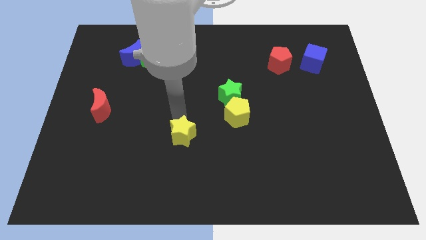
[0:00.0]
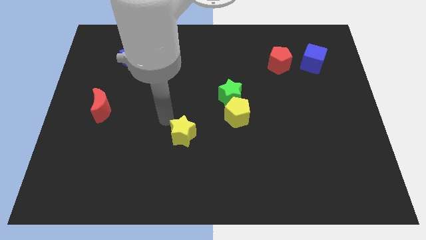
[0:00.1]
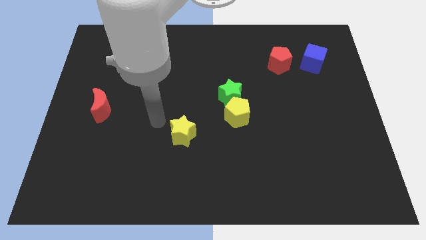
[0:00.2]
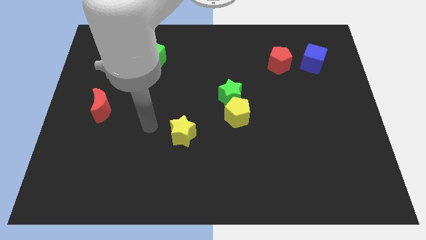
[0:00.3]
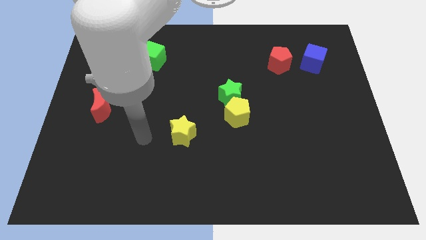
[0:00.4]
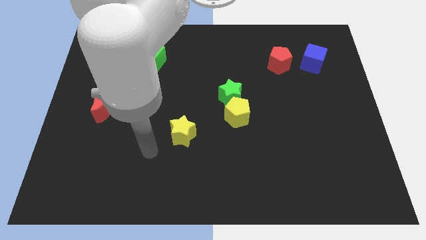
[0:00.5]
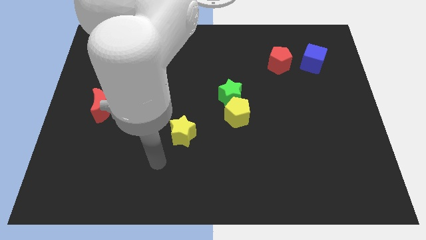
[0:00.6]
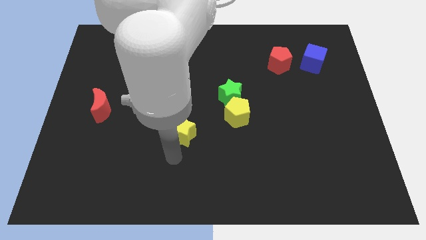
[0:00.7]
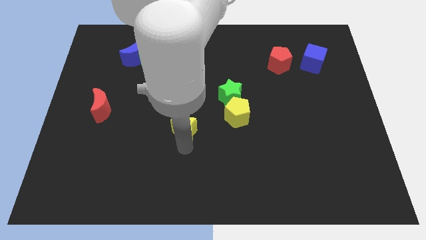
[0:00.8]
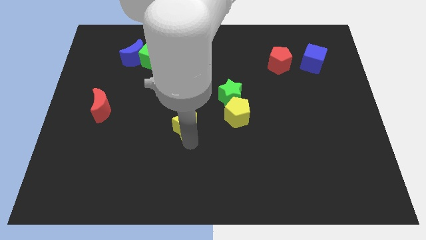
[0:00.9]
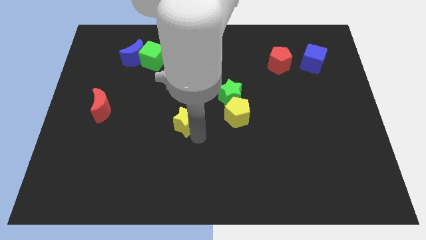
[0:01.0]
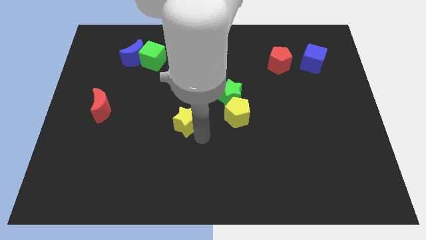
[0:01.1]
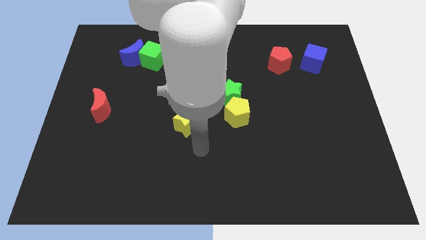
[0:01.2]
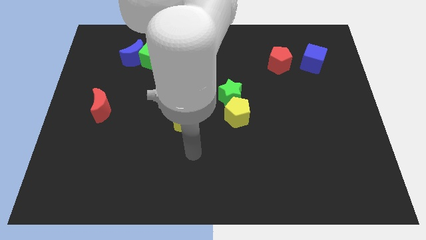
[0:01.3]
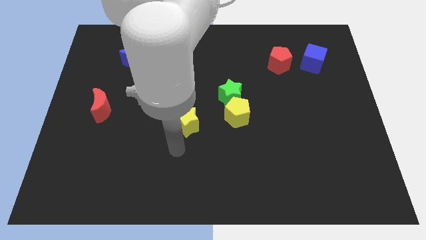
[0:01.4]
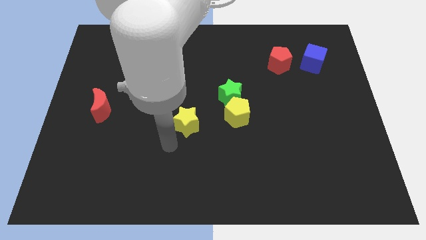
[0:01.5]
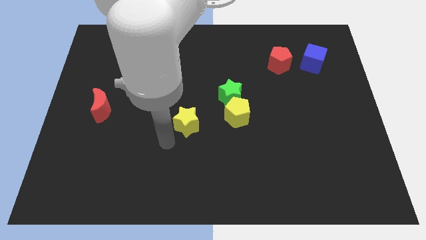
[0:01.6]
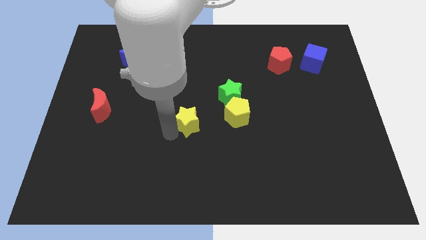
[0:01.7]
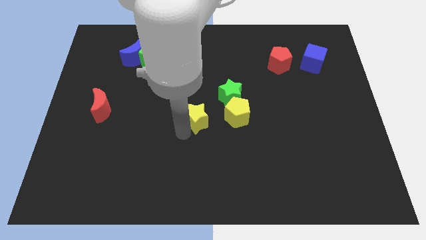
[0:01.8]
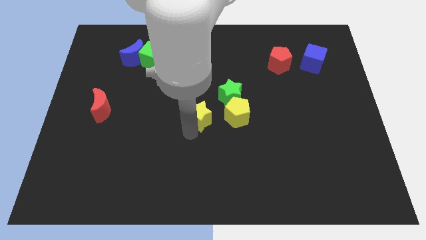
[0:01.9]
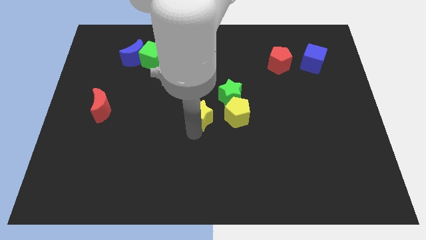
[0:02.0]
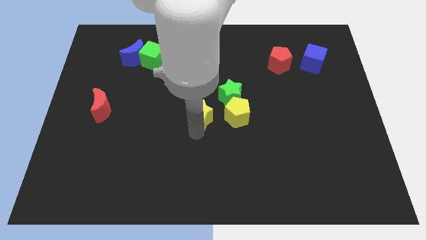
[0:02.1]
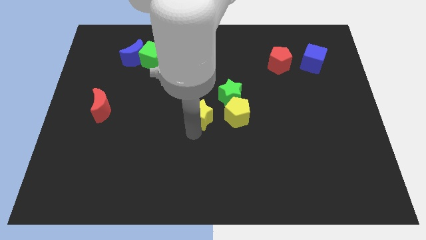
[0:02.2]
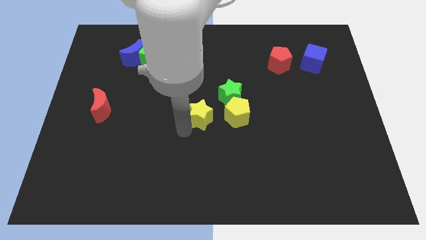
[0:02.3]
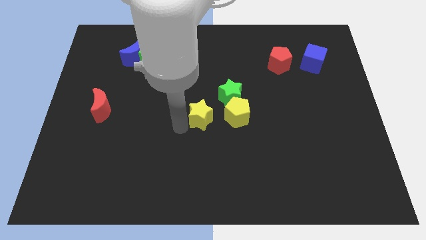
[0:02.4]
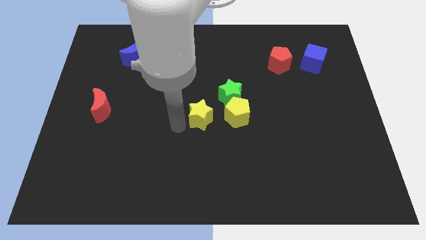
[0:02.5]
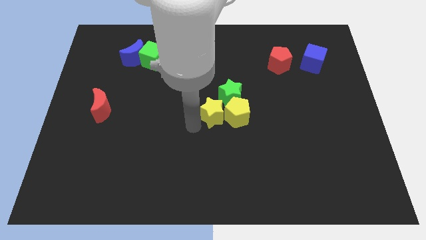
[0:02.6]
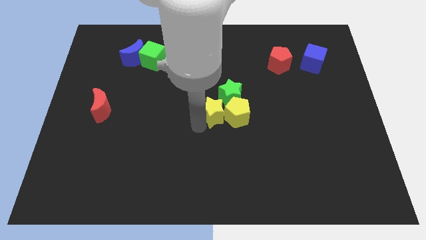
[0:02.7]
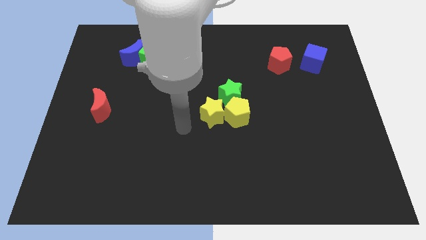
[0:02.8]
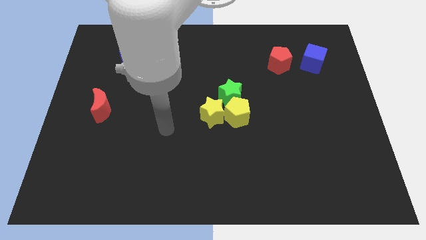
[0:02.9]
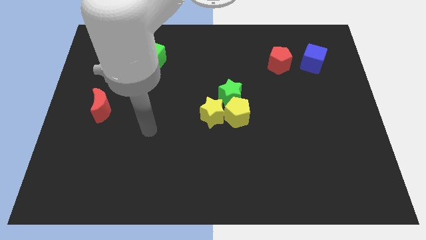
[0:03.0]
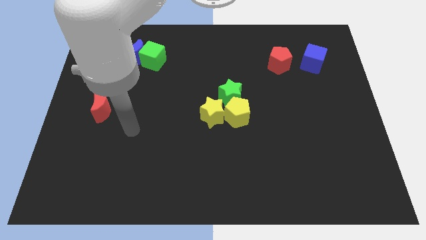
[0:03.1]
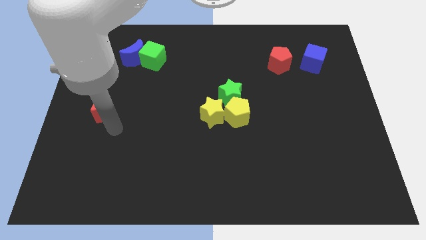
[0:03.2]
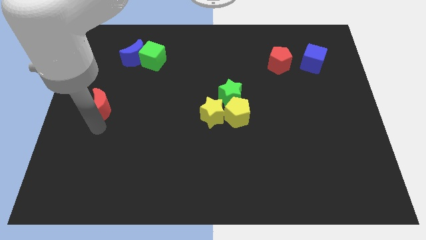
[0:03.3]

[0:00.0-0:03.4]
move the yellow star left beside the yellow pentagon

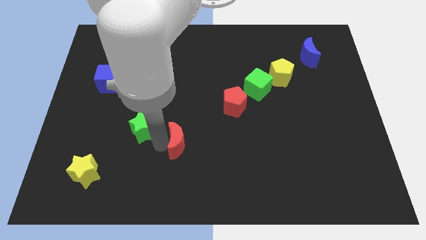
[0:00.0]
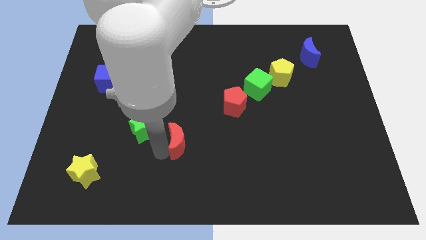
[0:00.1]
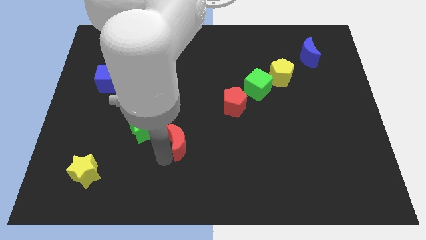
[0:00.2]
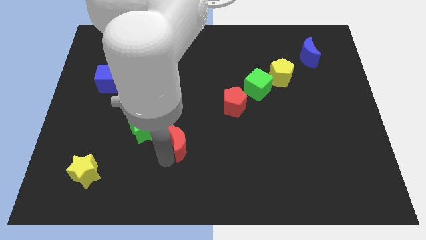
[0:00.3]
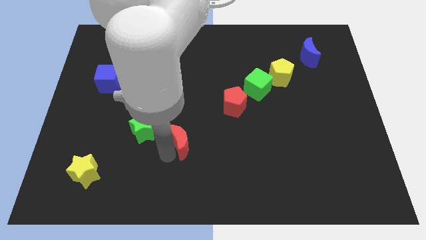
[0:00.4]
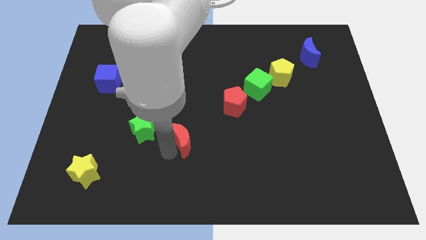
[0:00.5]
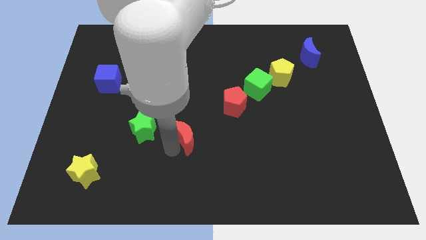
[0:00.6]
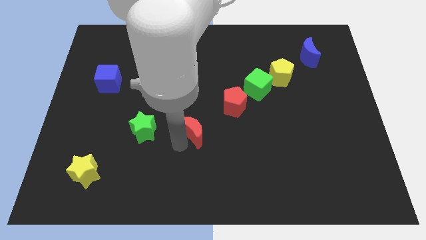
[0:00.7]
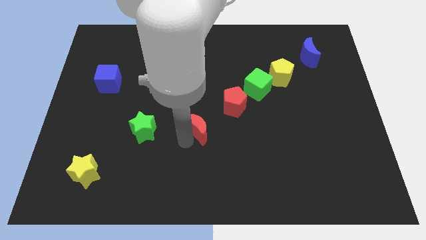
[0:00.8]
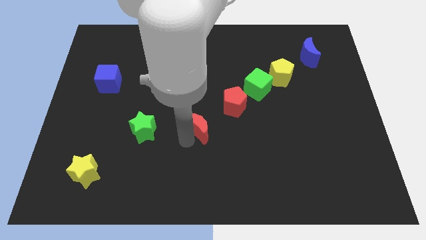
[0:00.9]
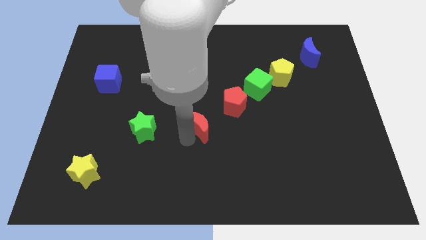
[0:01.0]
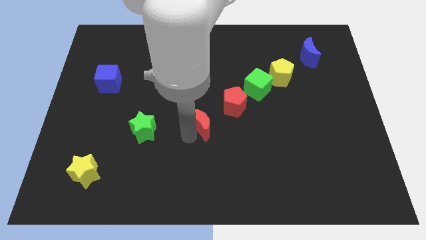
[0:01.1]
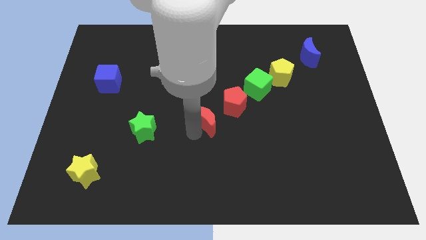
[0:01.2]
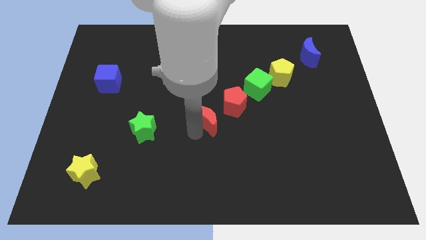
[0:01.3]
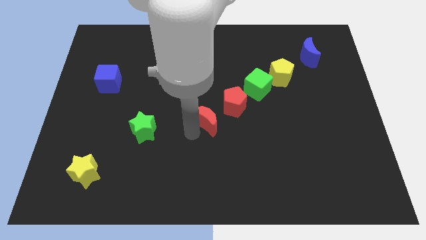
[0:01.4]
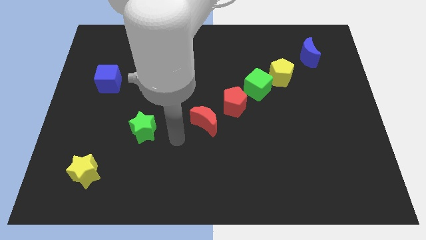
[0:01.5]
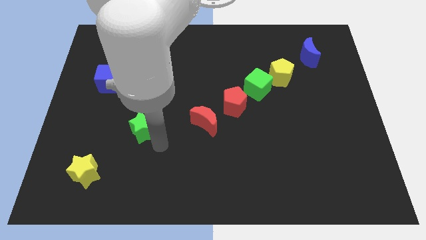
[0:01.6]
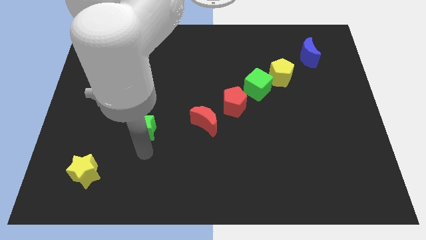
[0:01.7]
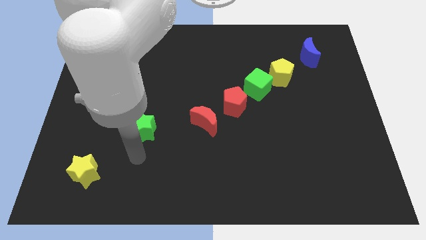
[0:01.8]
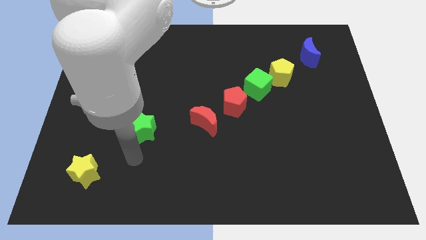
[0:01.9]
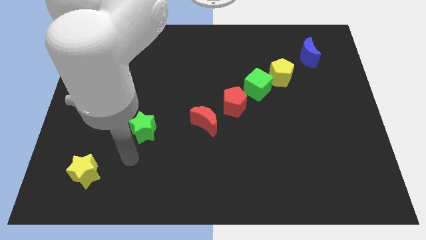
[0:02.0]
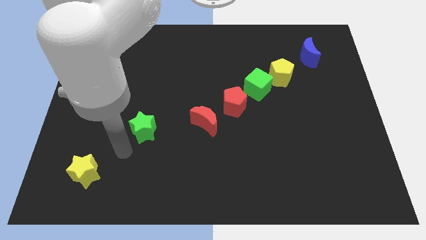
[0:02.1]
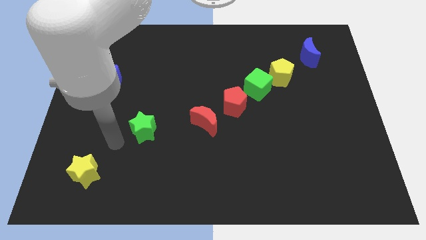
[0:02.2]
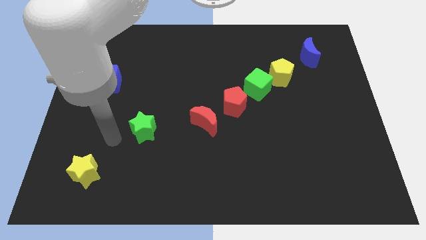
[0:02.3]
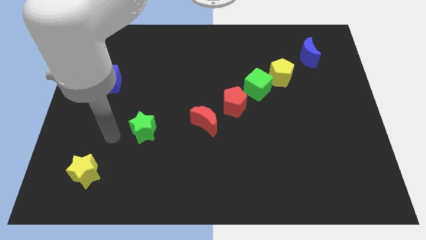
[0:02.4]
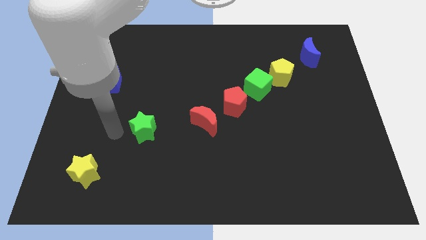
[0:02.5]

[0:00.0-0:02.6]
move the red moon towards the red pentagon and go away

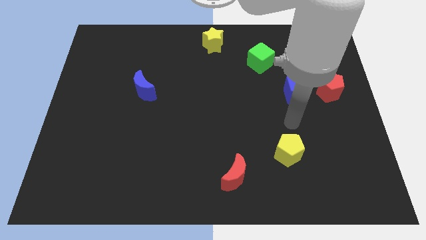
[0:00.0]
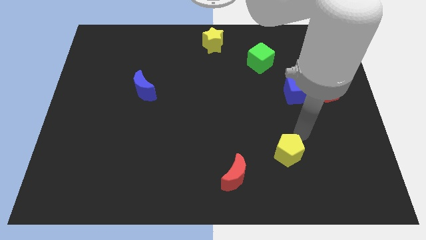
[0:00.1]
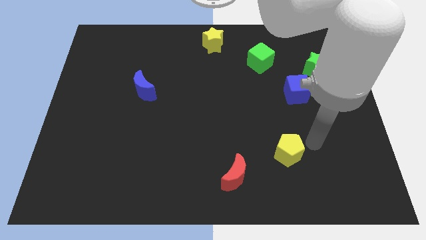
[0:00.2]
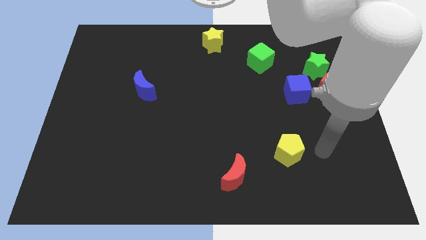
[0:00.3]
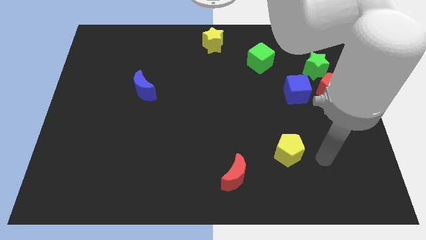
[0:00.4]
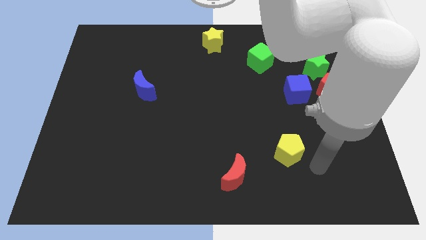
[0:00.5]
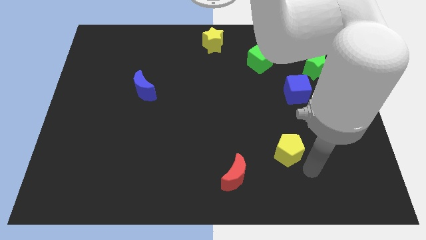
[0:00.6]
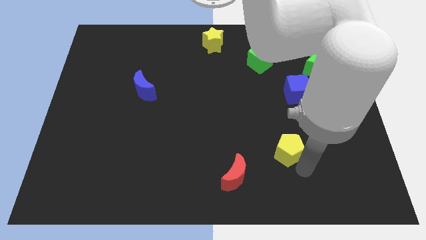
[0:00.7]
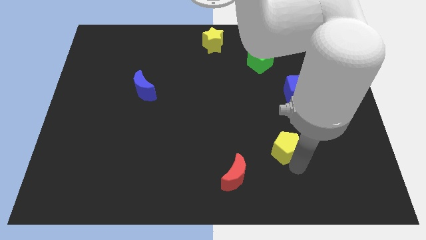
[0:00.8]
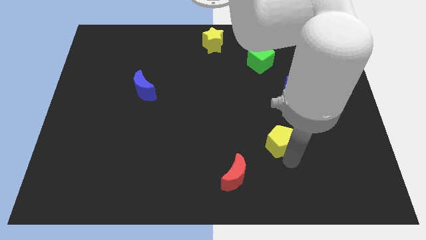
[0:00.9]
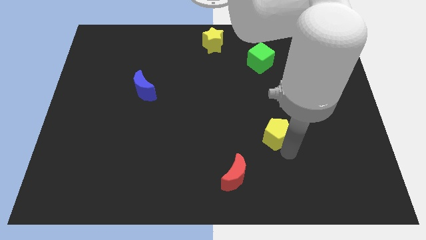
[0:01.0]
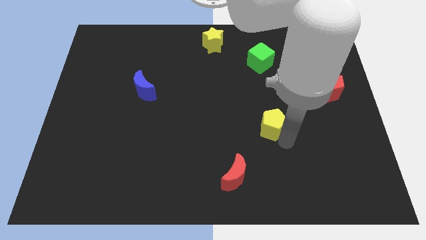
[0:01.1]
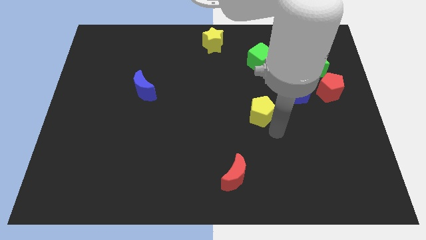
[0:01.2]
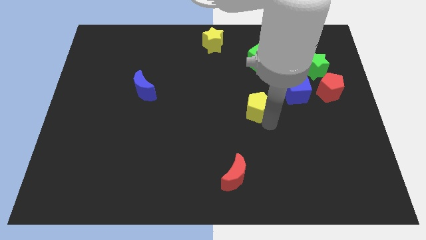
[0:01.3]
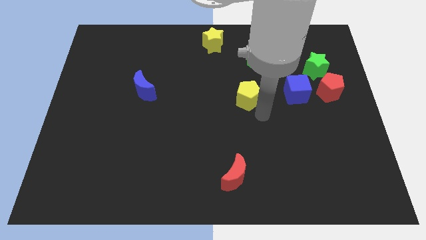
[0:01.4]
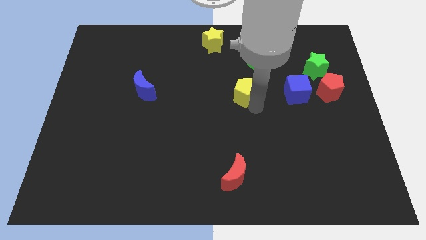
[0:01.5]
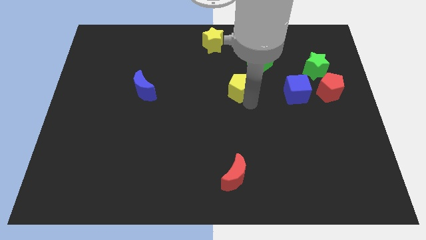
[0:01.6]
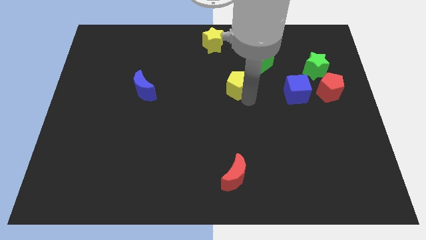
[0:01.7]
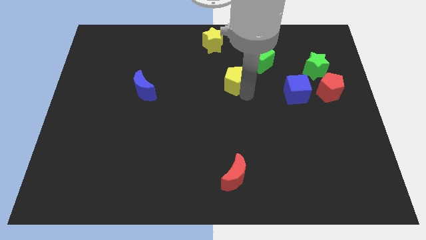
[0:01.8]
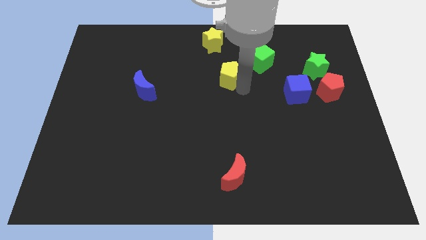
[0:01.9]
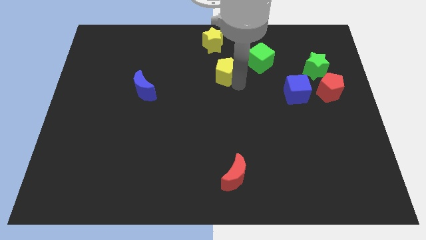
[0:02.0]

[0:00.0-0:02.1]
move yellow pentagon towards yellow star

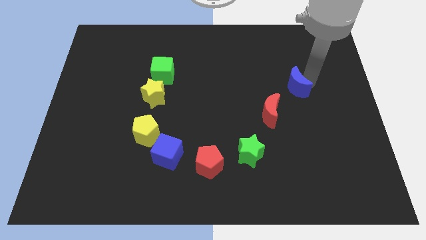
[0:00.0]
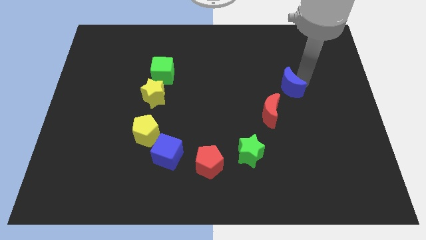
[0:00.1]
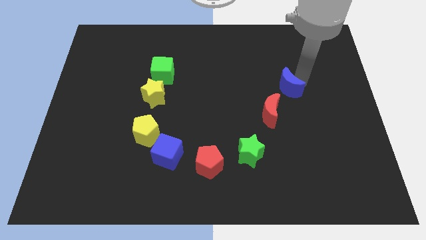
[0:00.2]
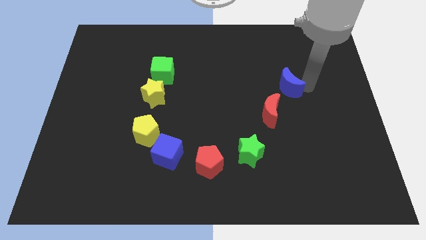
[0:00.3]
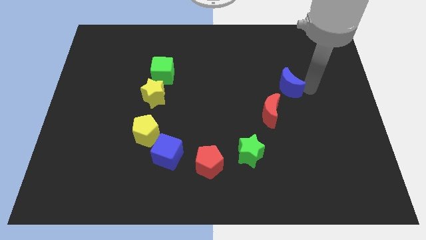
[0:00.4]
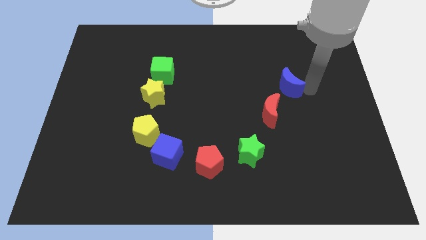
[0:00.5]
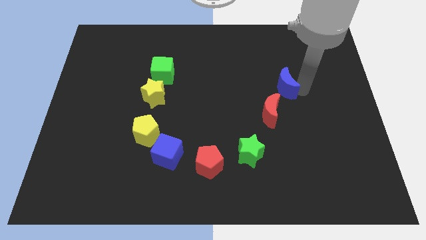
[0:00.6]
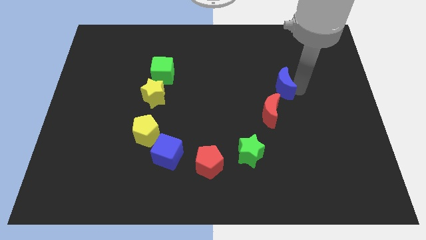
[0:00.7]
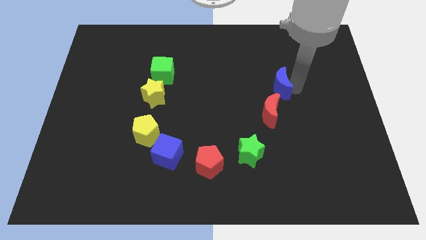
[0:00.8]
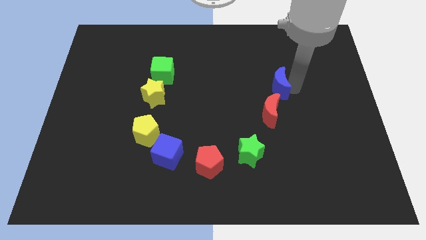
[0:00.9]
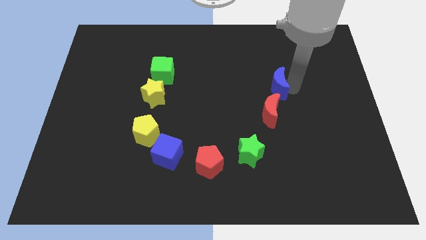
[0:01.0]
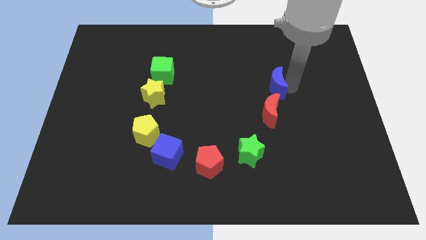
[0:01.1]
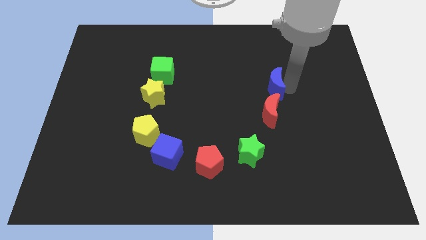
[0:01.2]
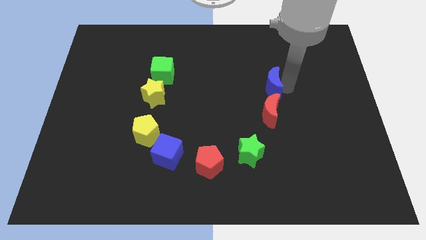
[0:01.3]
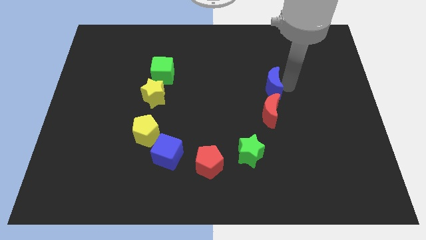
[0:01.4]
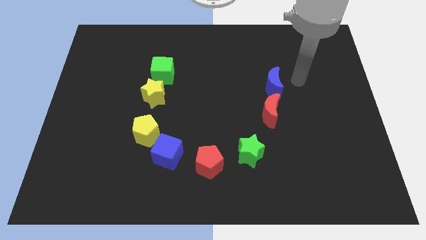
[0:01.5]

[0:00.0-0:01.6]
push the blue crescent above the red crescent
